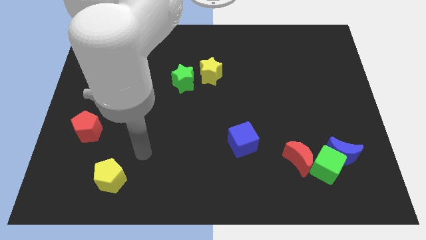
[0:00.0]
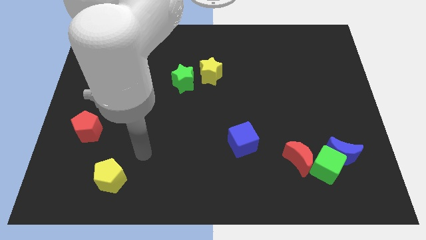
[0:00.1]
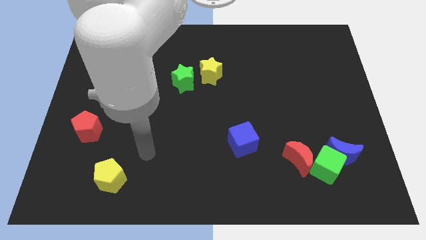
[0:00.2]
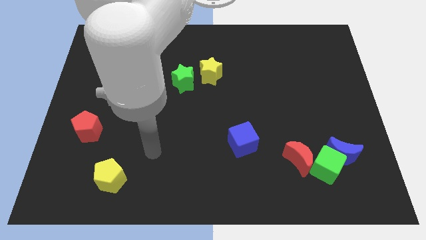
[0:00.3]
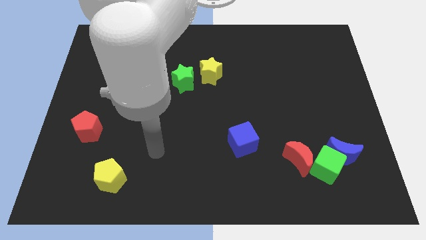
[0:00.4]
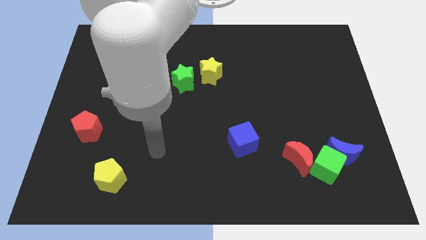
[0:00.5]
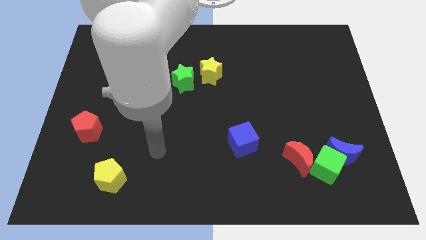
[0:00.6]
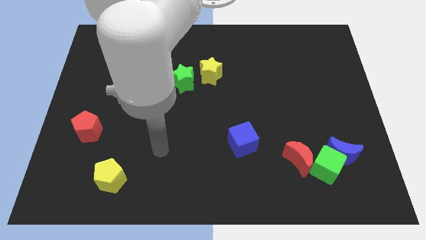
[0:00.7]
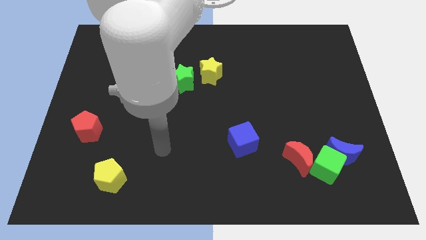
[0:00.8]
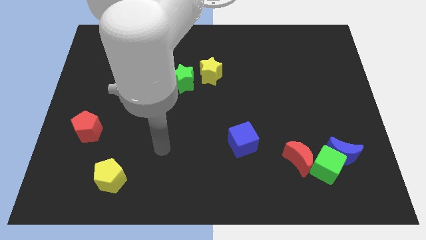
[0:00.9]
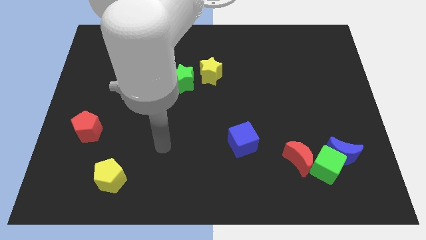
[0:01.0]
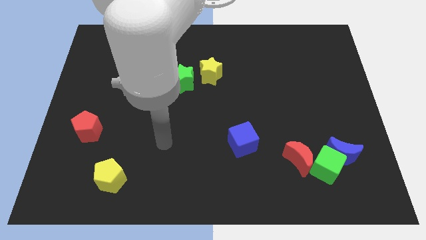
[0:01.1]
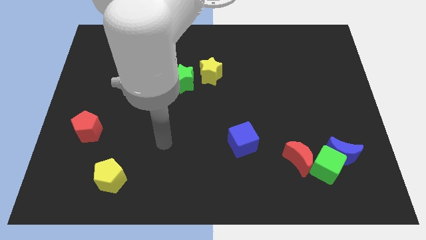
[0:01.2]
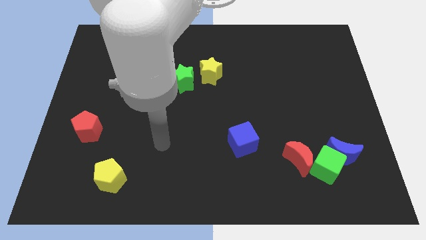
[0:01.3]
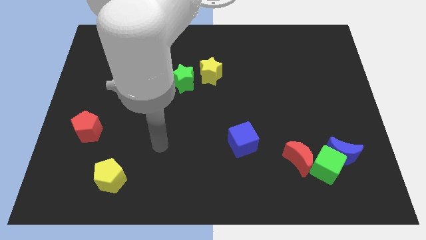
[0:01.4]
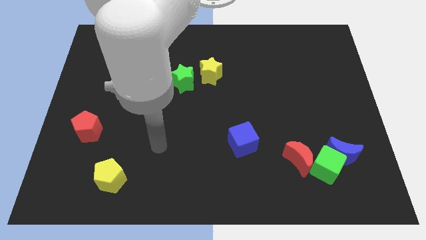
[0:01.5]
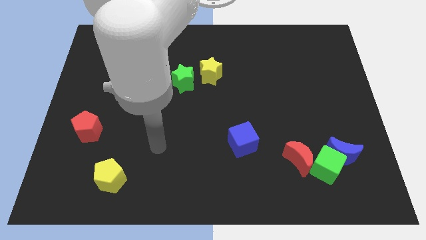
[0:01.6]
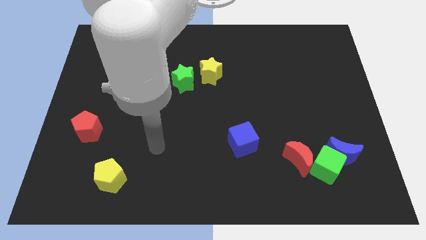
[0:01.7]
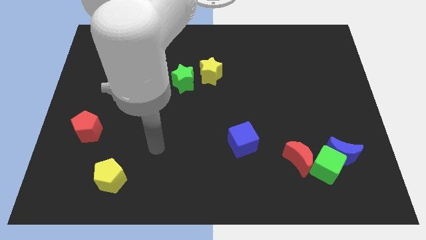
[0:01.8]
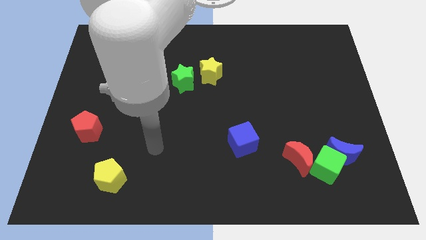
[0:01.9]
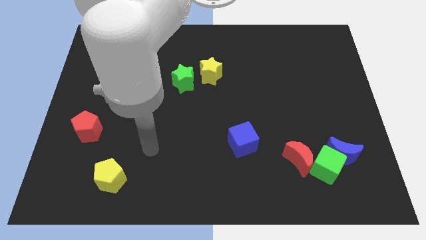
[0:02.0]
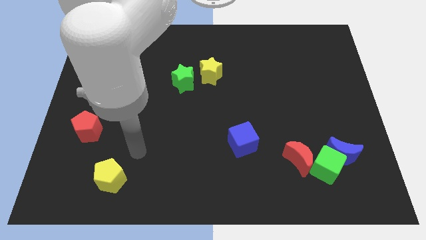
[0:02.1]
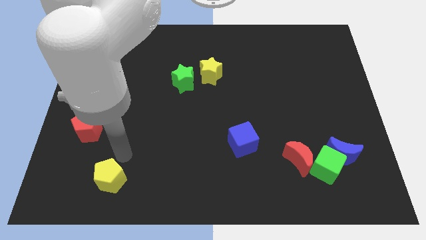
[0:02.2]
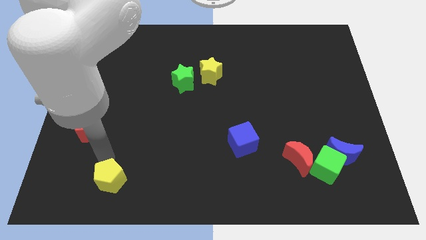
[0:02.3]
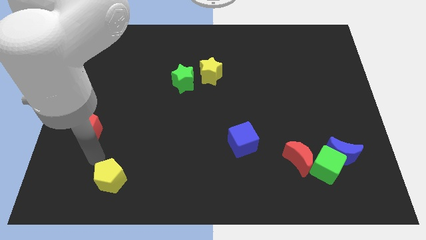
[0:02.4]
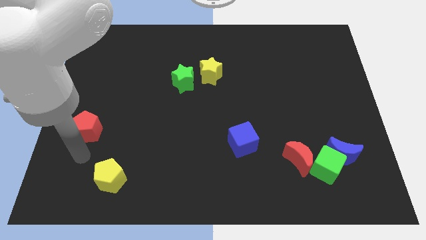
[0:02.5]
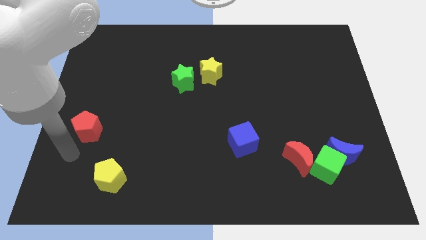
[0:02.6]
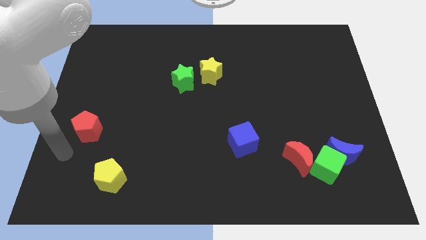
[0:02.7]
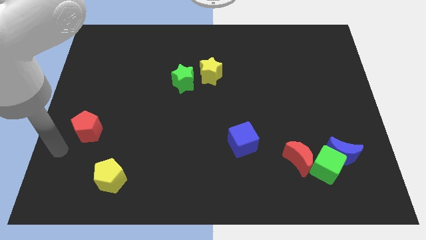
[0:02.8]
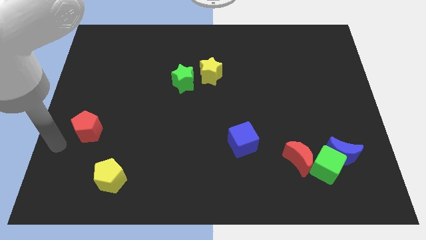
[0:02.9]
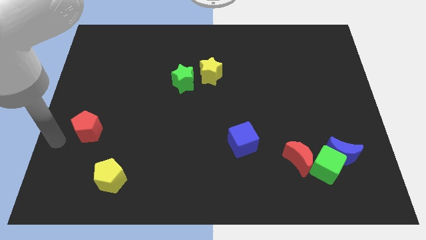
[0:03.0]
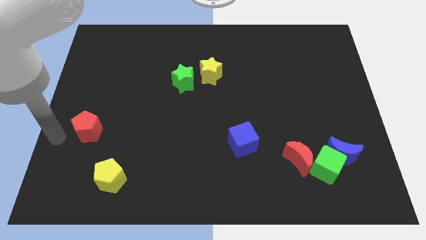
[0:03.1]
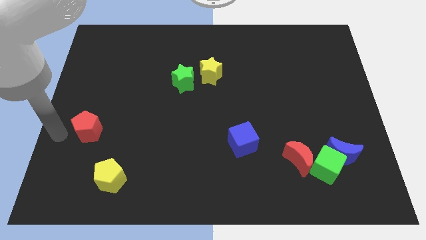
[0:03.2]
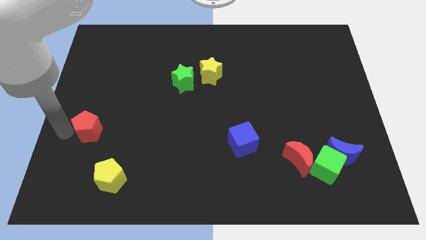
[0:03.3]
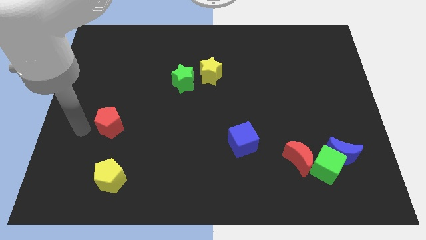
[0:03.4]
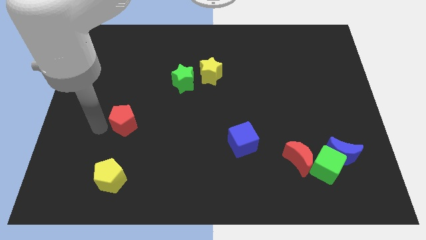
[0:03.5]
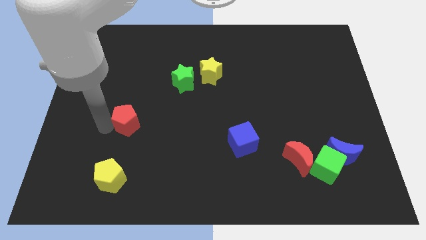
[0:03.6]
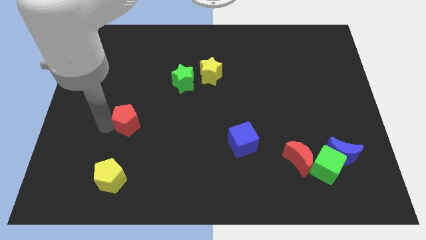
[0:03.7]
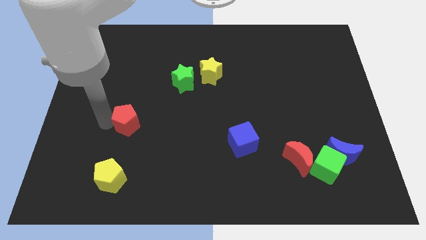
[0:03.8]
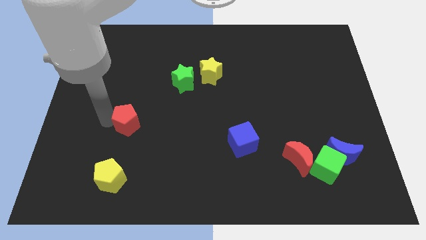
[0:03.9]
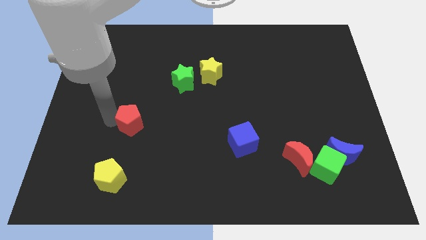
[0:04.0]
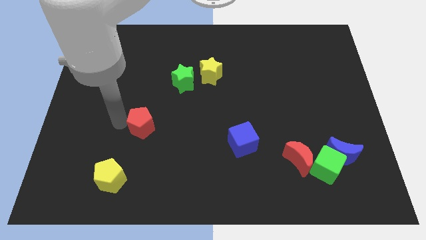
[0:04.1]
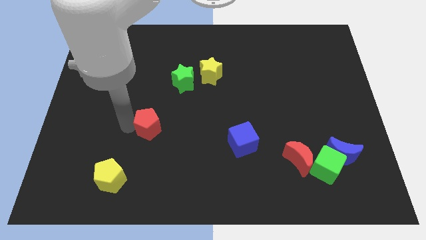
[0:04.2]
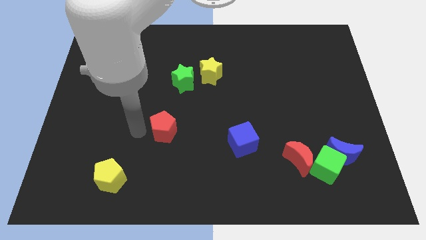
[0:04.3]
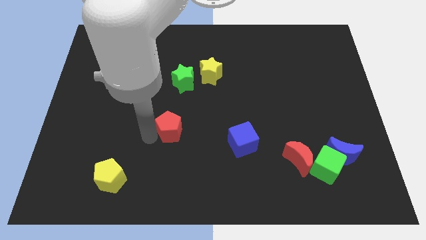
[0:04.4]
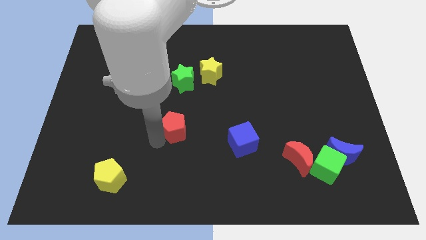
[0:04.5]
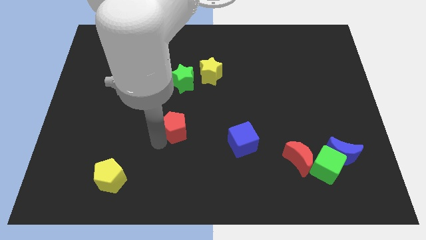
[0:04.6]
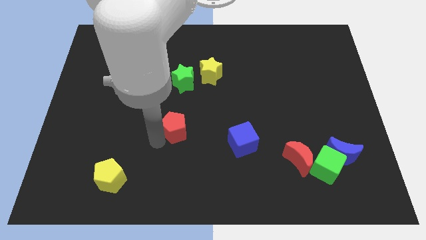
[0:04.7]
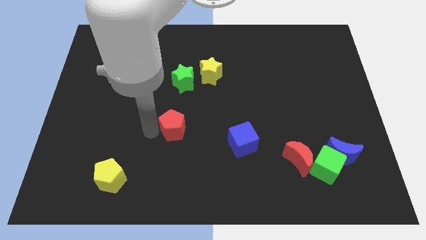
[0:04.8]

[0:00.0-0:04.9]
push the red pentagon towards the center of the board

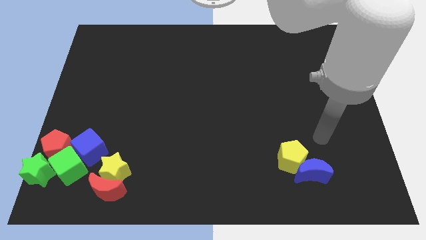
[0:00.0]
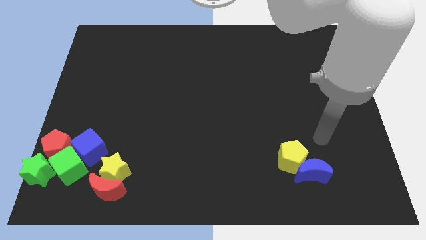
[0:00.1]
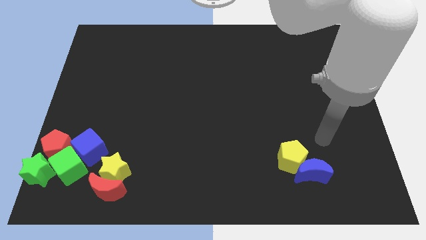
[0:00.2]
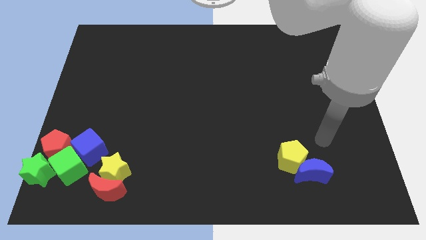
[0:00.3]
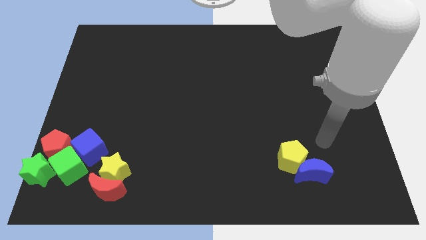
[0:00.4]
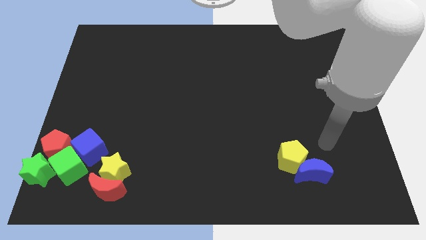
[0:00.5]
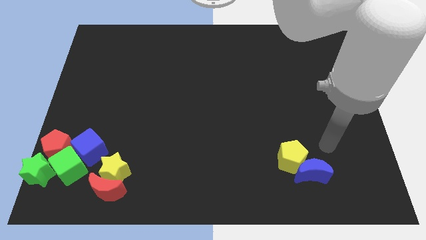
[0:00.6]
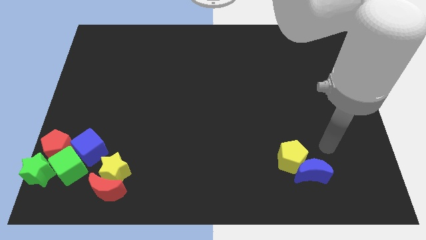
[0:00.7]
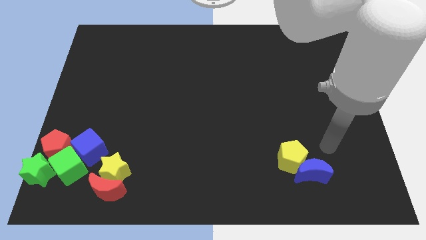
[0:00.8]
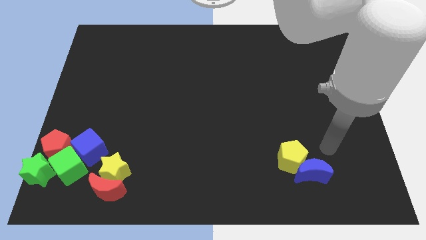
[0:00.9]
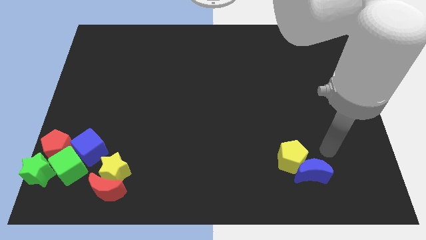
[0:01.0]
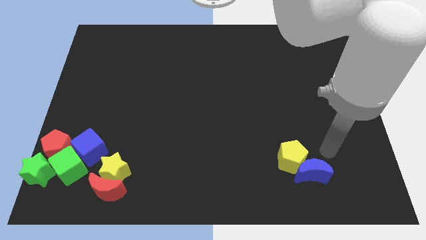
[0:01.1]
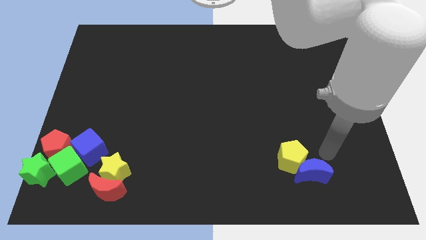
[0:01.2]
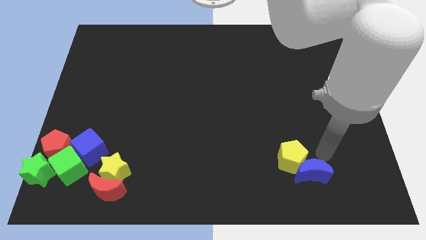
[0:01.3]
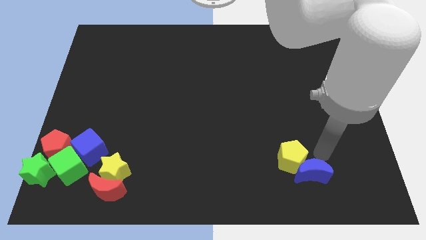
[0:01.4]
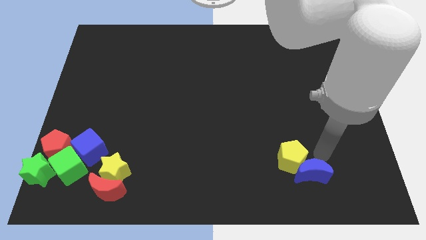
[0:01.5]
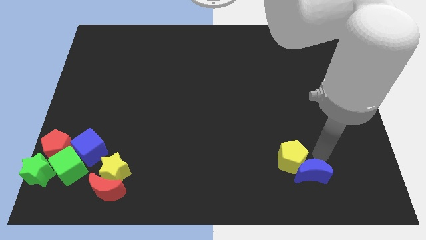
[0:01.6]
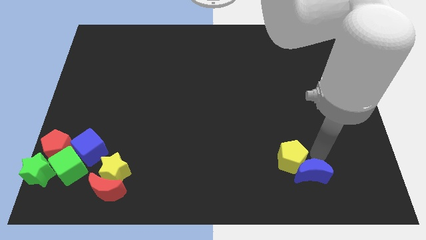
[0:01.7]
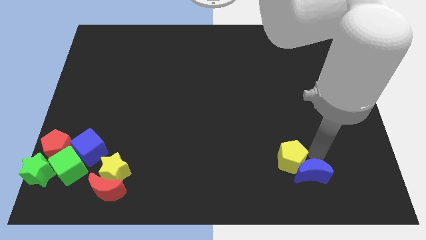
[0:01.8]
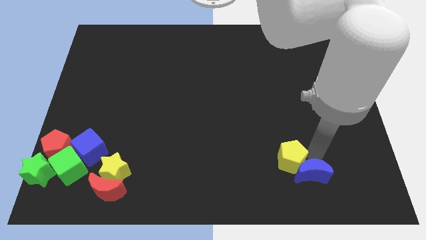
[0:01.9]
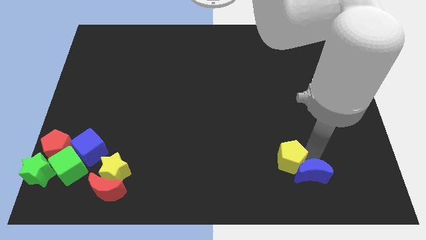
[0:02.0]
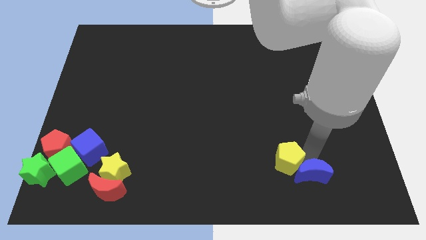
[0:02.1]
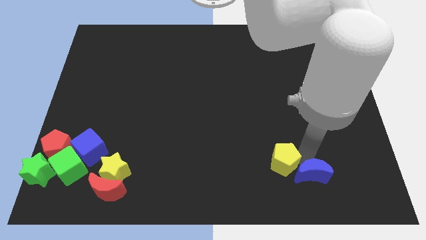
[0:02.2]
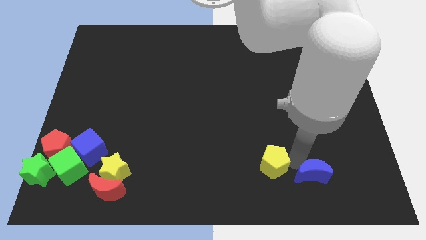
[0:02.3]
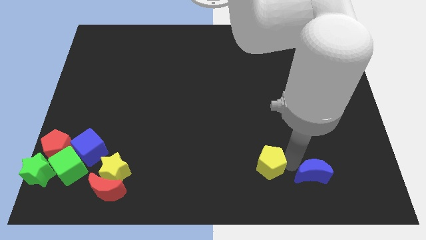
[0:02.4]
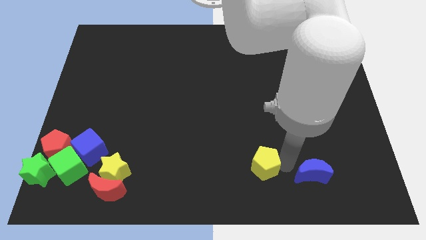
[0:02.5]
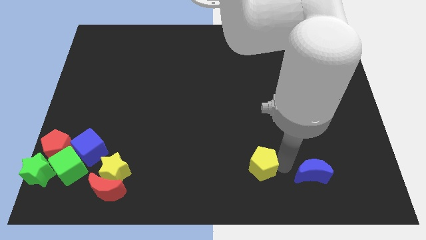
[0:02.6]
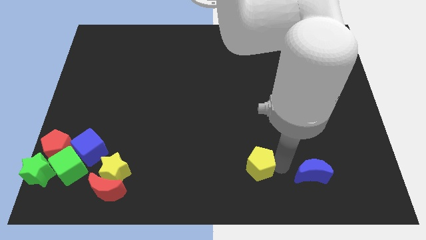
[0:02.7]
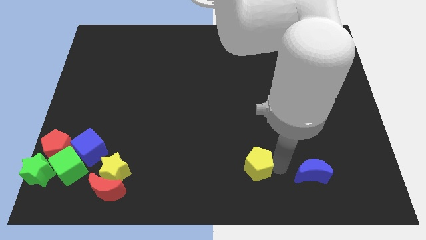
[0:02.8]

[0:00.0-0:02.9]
move the yellow pentagon to the left side of the blue moon

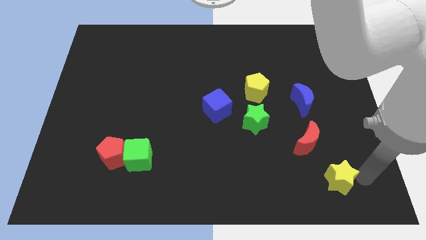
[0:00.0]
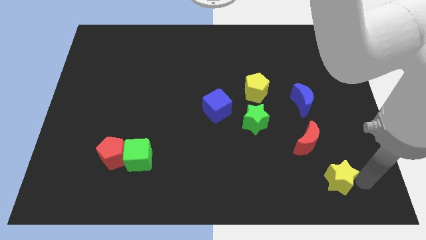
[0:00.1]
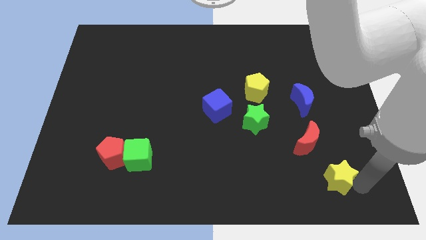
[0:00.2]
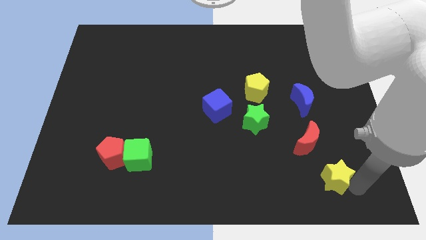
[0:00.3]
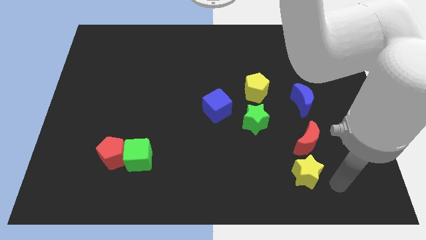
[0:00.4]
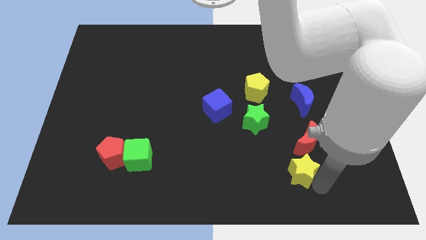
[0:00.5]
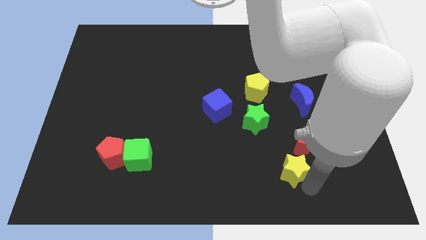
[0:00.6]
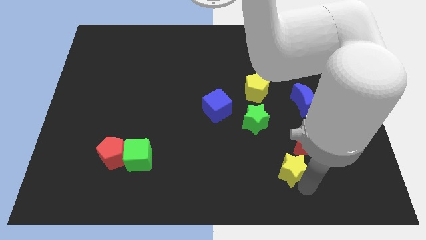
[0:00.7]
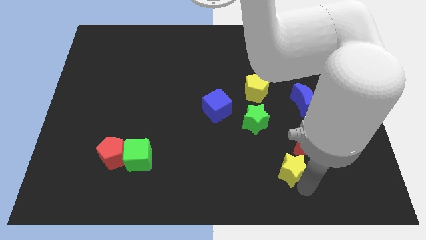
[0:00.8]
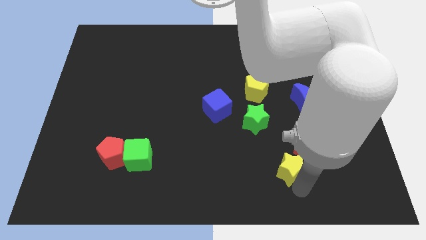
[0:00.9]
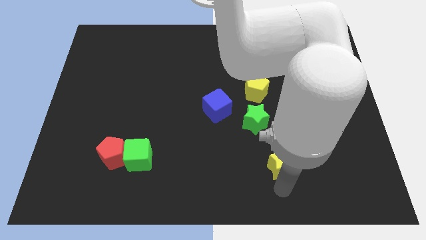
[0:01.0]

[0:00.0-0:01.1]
put the yellow star parallel to the green cube

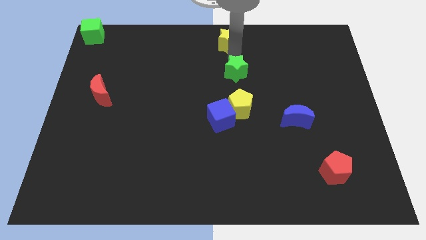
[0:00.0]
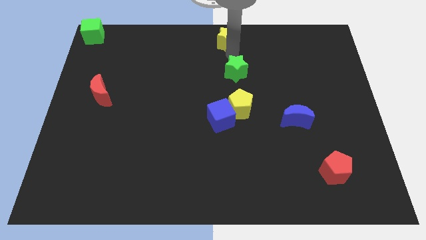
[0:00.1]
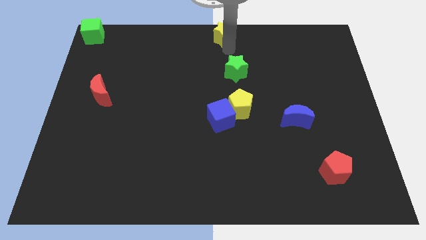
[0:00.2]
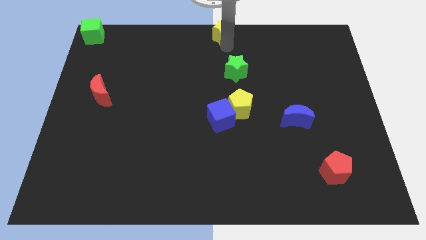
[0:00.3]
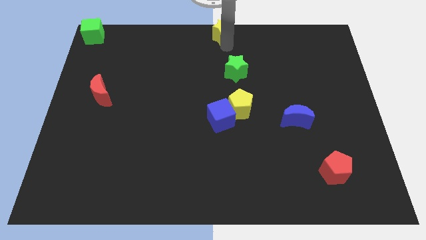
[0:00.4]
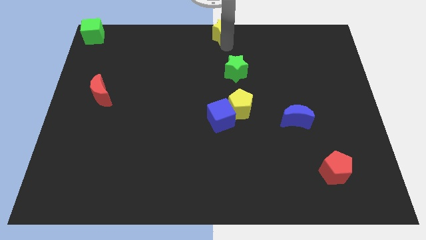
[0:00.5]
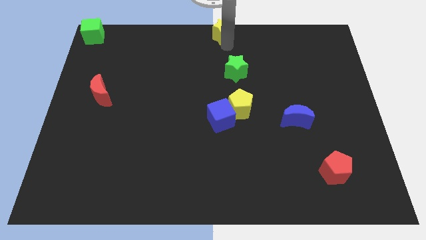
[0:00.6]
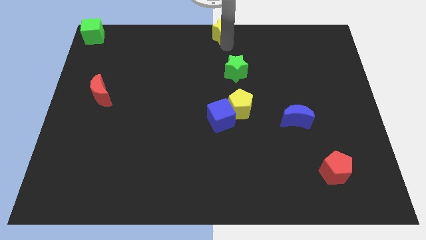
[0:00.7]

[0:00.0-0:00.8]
push the yellow star to the top center of the board
